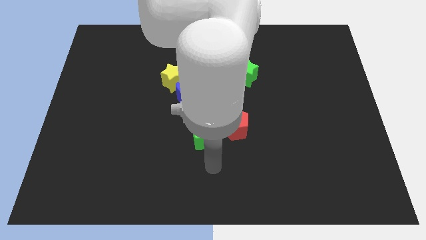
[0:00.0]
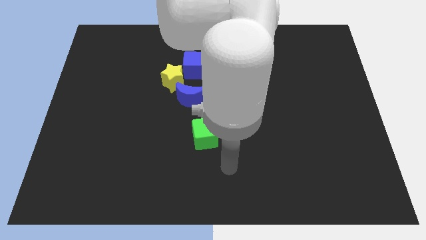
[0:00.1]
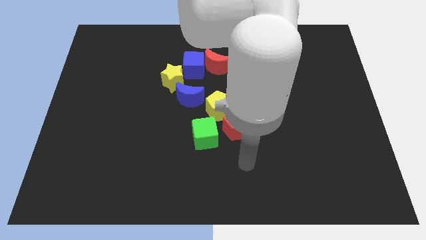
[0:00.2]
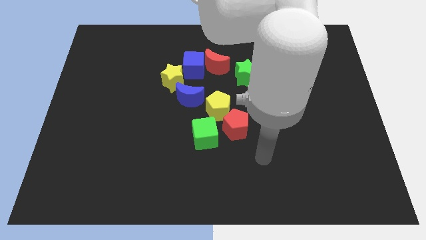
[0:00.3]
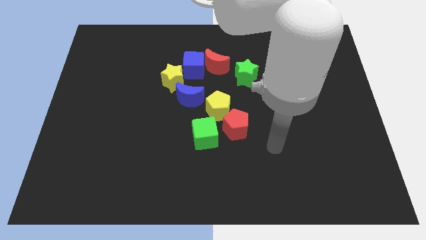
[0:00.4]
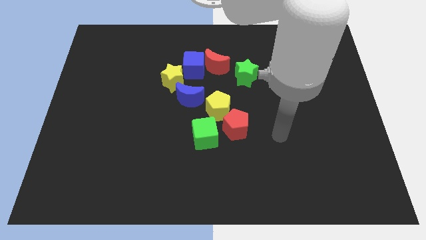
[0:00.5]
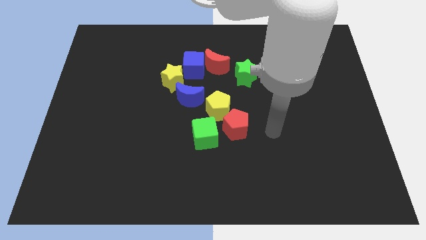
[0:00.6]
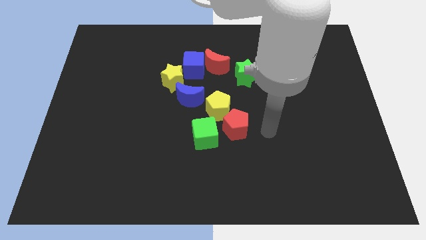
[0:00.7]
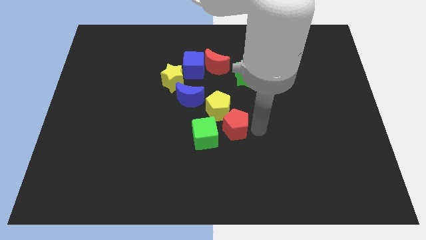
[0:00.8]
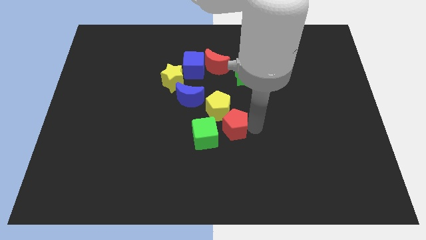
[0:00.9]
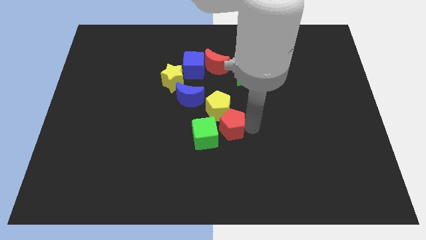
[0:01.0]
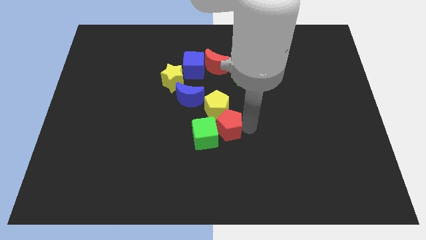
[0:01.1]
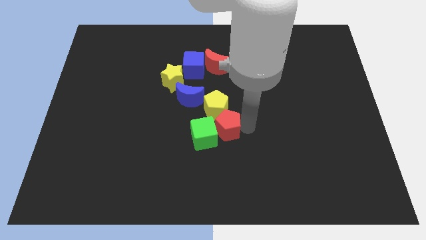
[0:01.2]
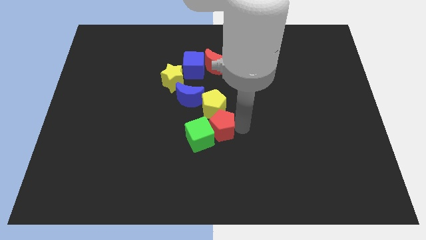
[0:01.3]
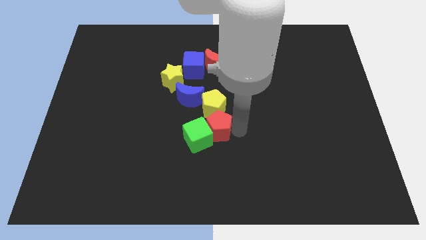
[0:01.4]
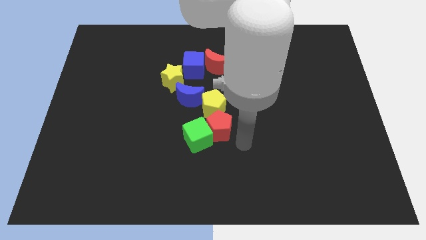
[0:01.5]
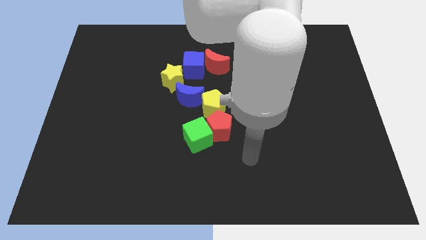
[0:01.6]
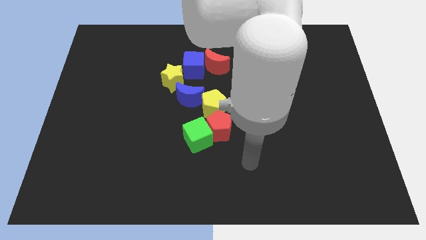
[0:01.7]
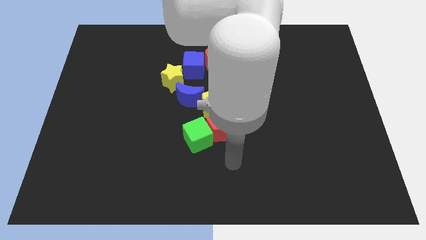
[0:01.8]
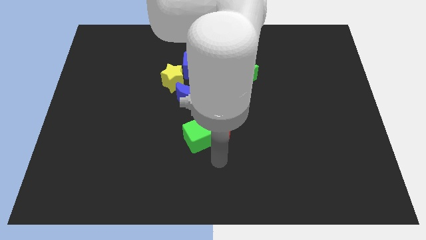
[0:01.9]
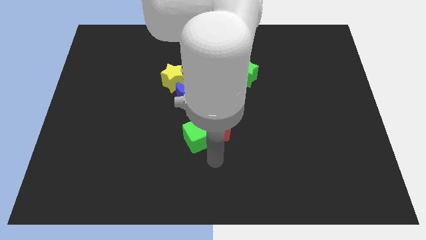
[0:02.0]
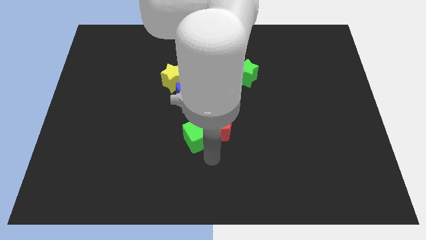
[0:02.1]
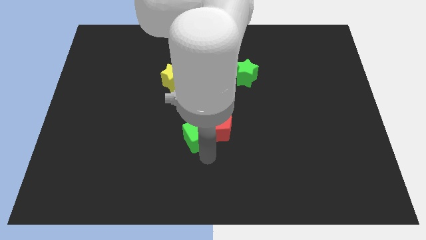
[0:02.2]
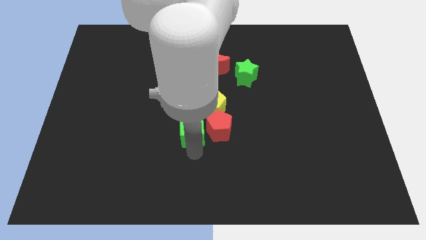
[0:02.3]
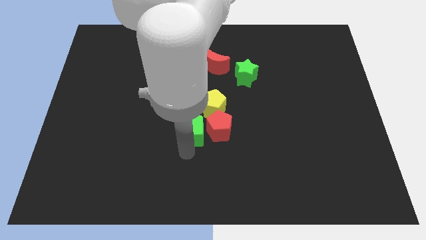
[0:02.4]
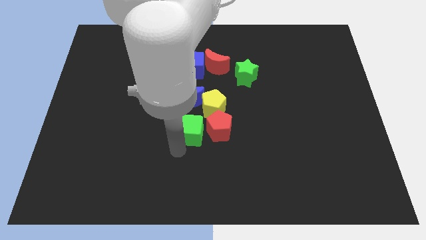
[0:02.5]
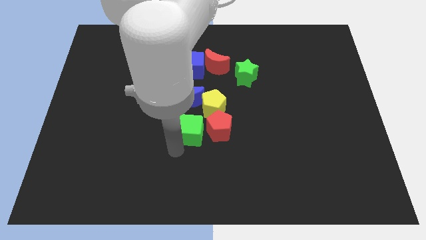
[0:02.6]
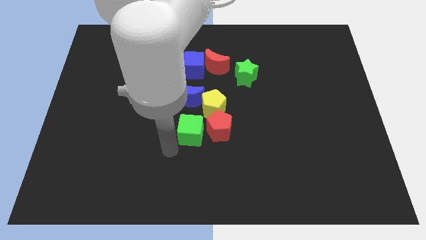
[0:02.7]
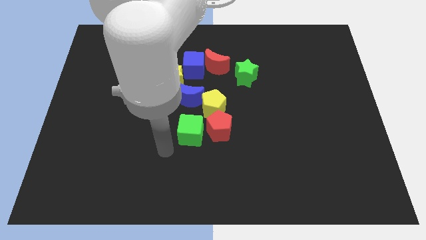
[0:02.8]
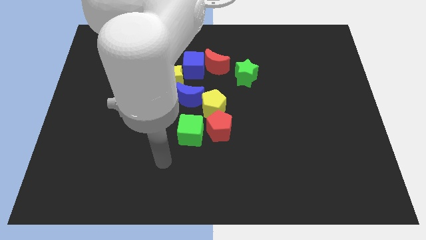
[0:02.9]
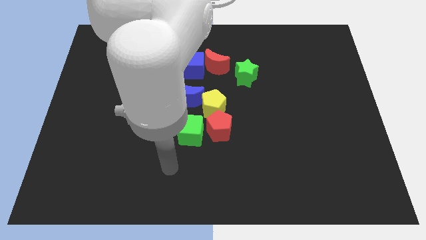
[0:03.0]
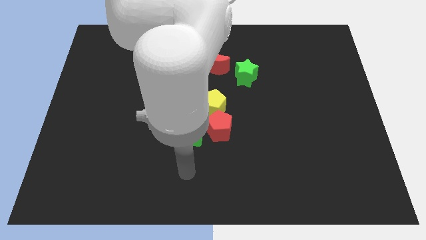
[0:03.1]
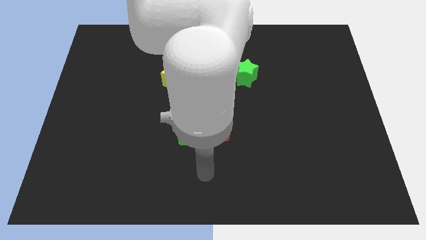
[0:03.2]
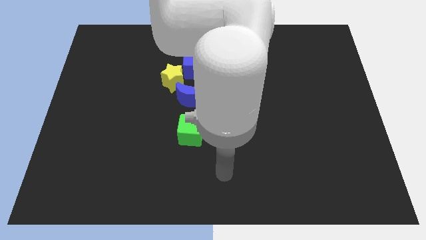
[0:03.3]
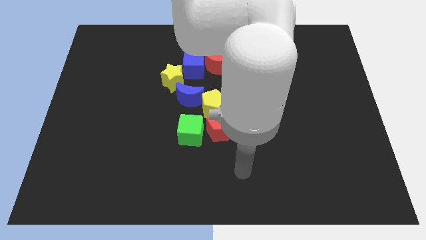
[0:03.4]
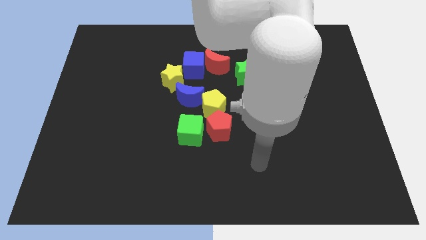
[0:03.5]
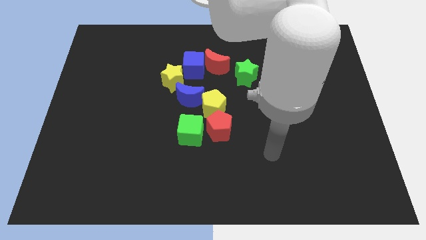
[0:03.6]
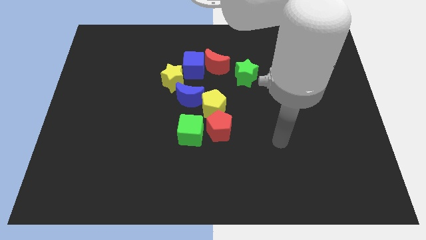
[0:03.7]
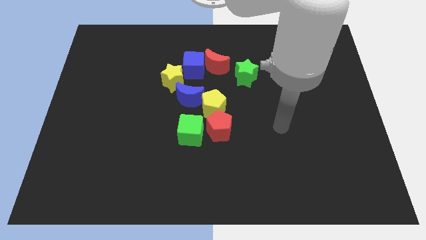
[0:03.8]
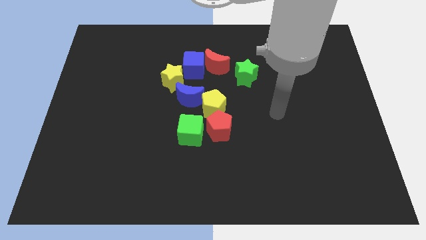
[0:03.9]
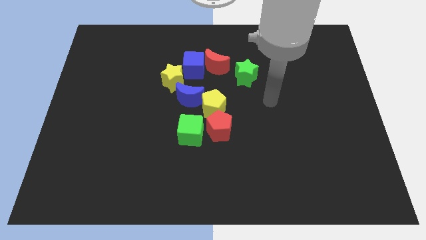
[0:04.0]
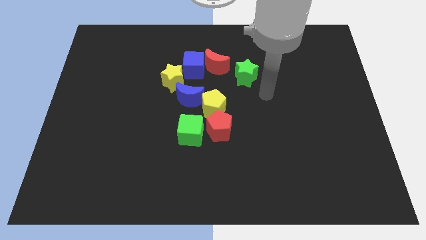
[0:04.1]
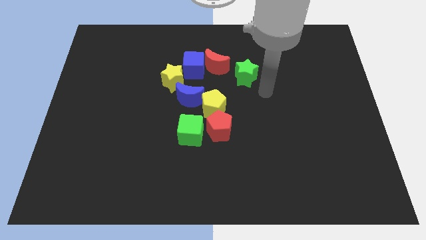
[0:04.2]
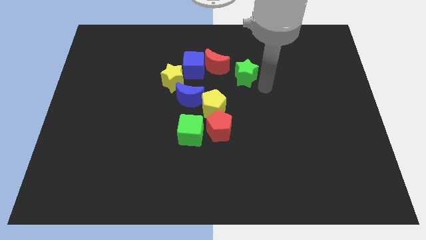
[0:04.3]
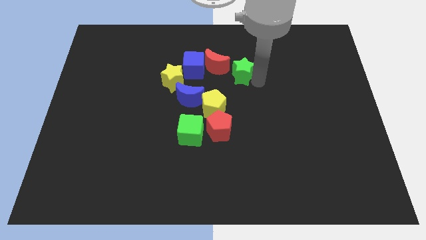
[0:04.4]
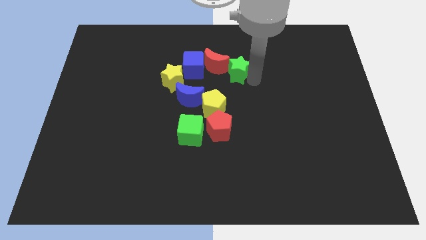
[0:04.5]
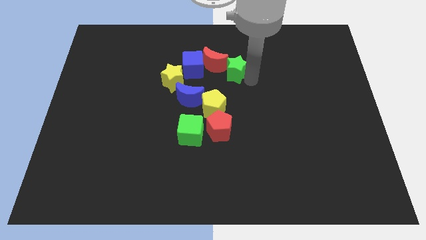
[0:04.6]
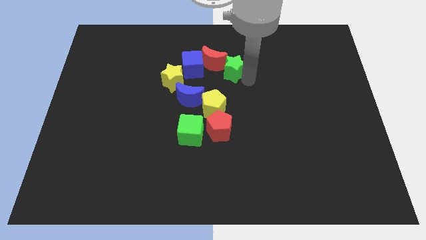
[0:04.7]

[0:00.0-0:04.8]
move the green star into the red crescent

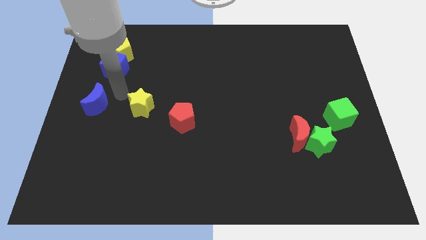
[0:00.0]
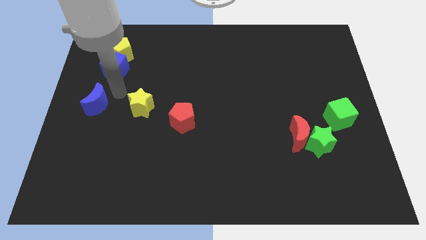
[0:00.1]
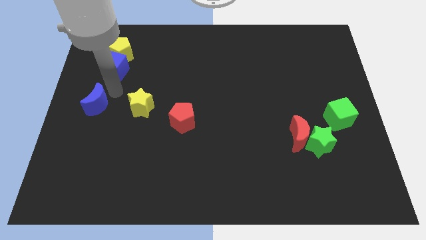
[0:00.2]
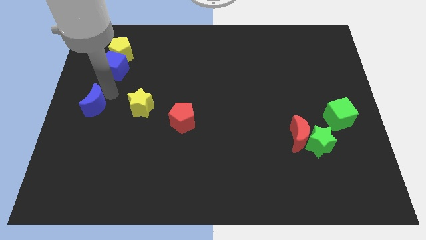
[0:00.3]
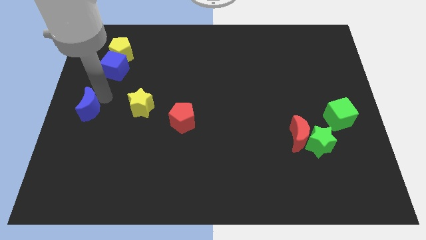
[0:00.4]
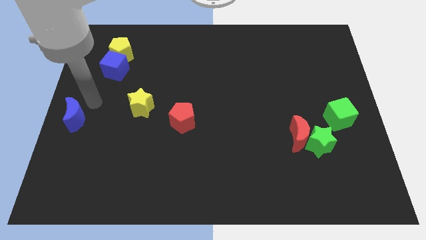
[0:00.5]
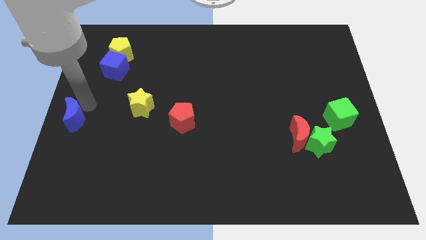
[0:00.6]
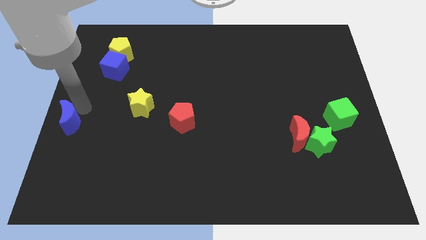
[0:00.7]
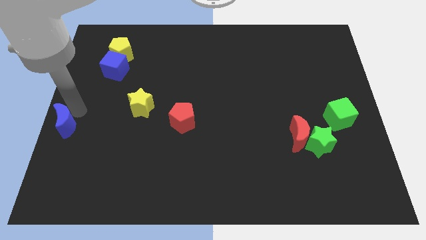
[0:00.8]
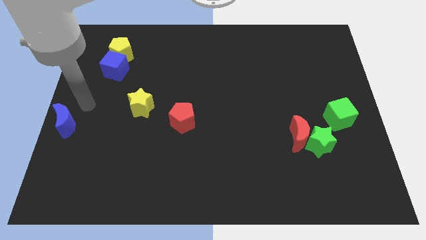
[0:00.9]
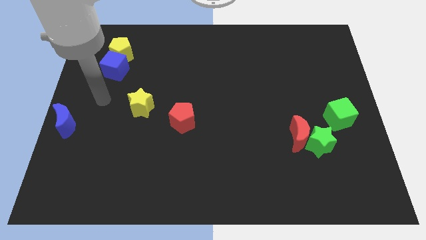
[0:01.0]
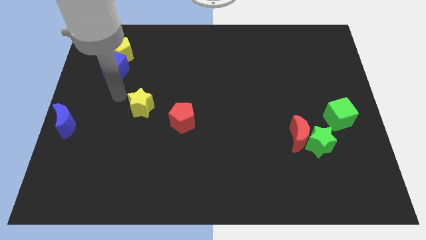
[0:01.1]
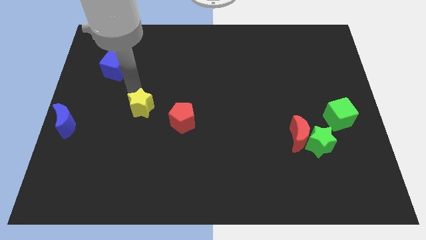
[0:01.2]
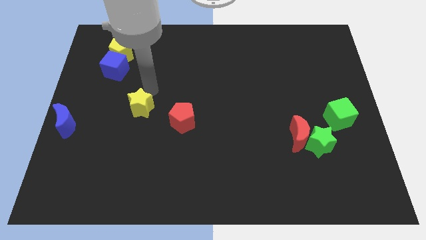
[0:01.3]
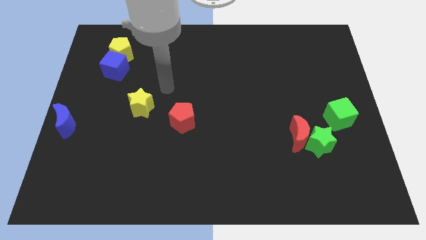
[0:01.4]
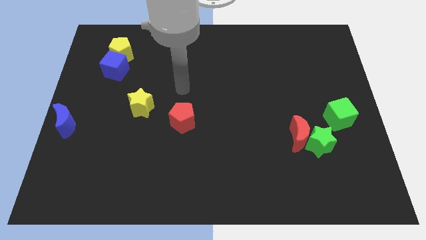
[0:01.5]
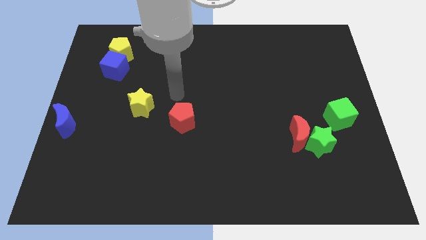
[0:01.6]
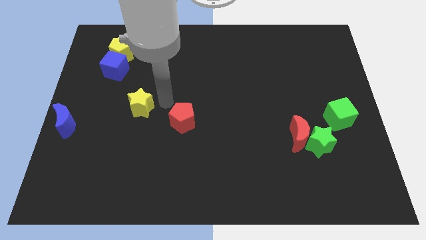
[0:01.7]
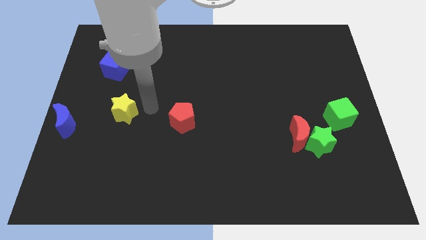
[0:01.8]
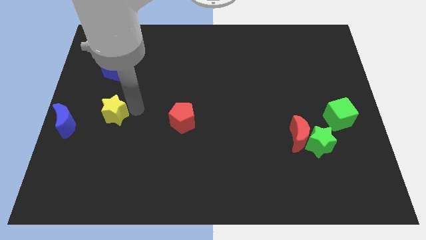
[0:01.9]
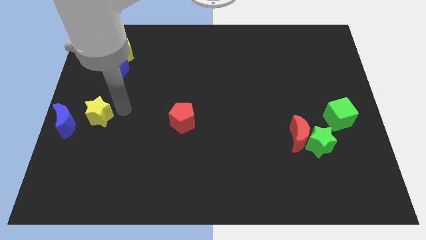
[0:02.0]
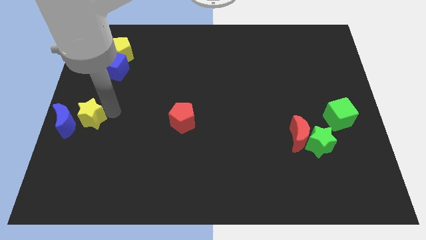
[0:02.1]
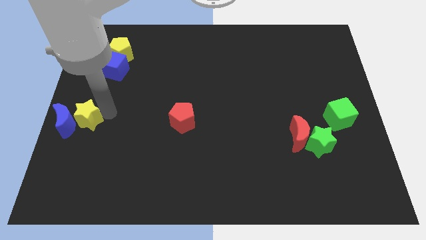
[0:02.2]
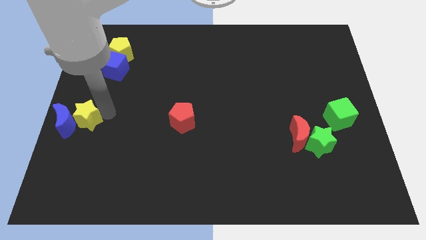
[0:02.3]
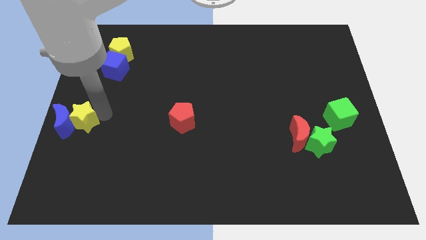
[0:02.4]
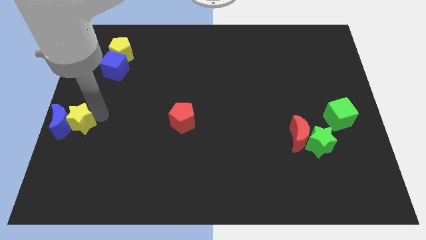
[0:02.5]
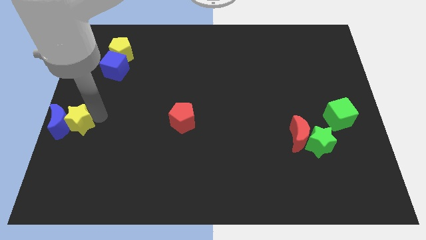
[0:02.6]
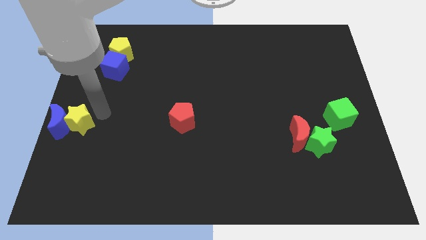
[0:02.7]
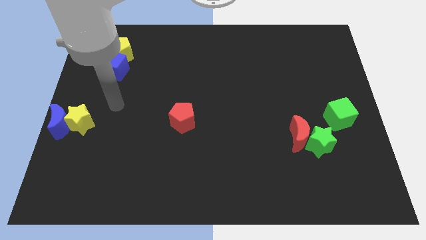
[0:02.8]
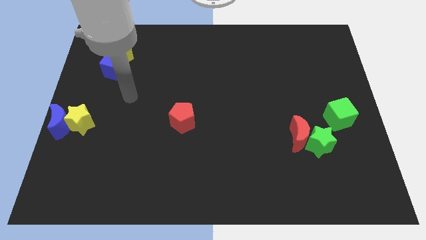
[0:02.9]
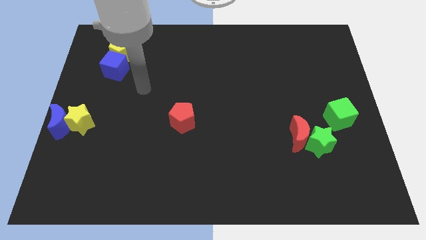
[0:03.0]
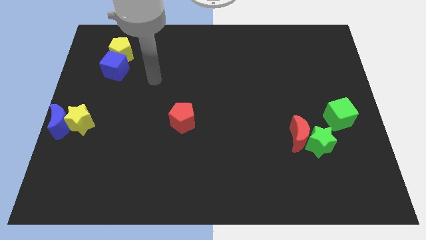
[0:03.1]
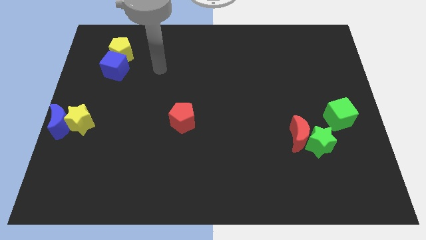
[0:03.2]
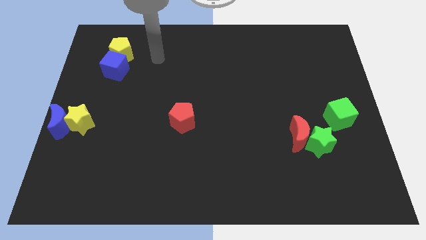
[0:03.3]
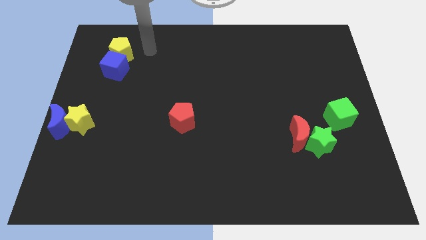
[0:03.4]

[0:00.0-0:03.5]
push the yellow star and the blue moon to the center left

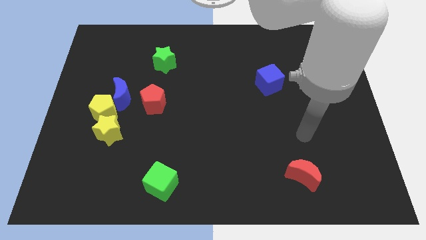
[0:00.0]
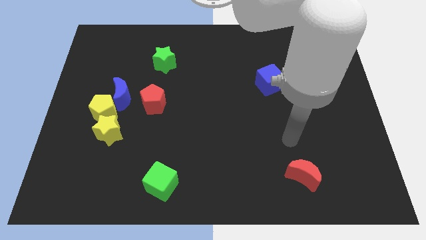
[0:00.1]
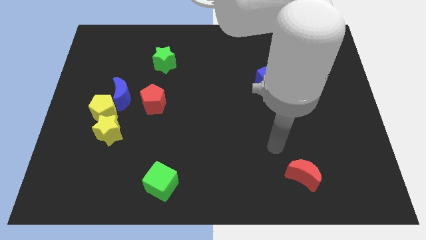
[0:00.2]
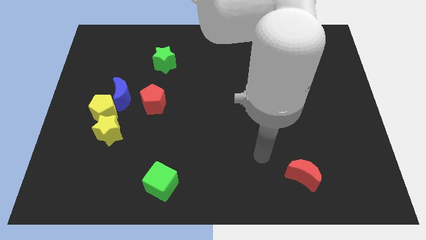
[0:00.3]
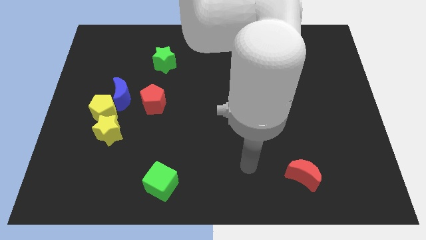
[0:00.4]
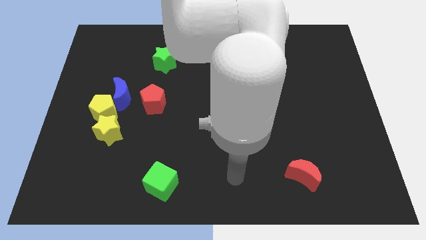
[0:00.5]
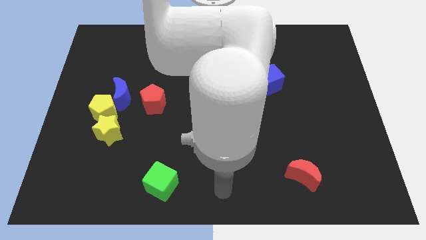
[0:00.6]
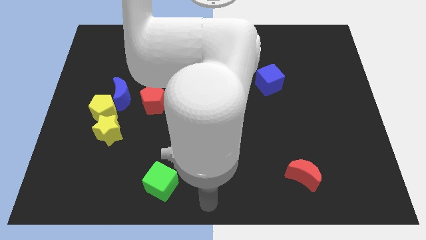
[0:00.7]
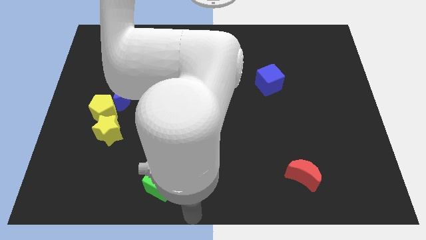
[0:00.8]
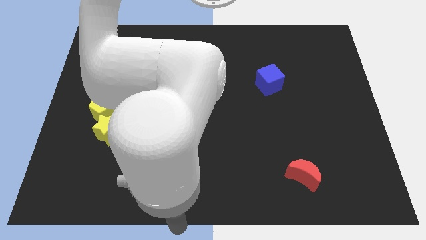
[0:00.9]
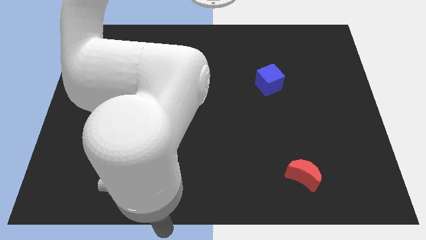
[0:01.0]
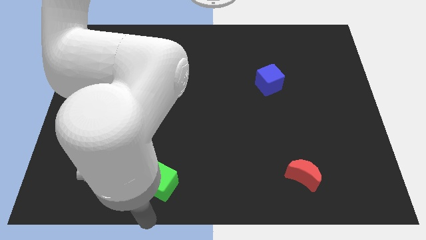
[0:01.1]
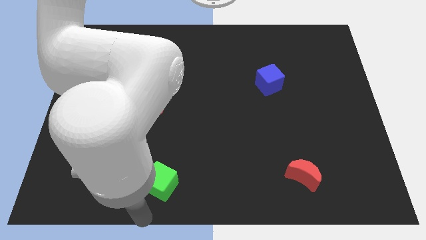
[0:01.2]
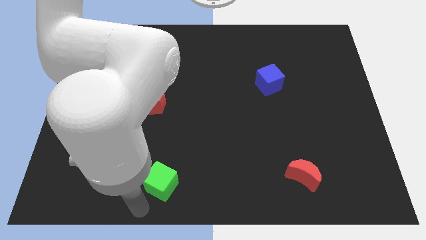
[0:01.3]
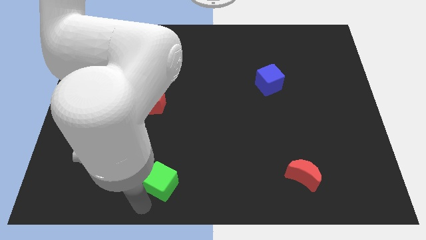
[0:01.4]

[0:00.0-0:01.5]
point your arm at the bottom left side of the green cube
